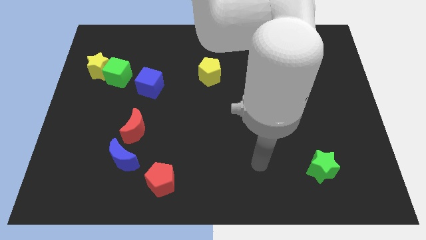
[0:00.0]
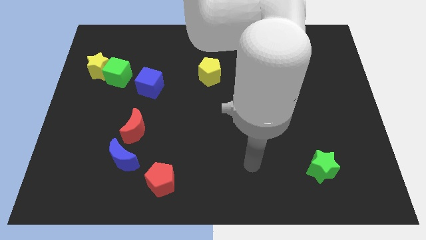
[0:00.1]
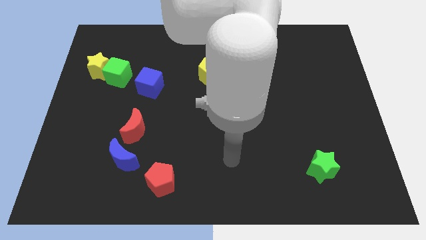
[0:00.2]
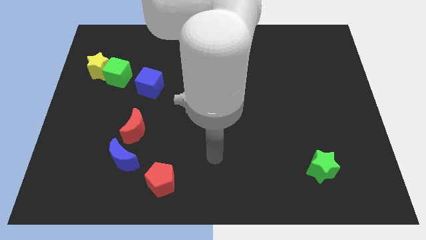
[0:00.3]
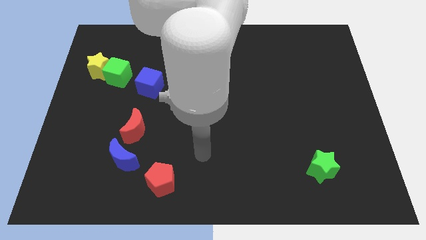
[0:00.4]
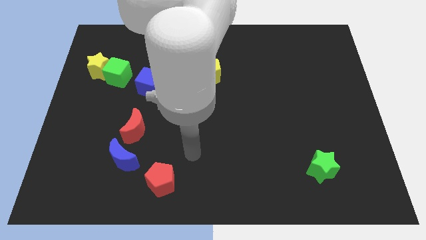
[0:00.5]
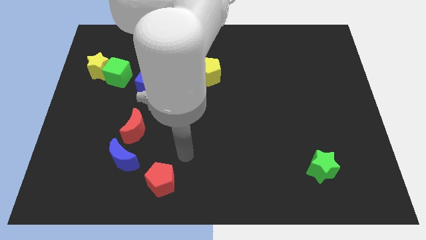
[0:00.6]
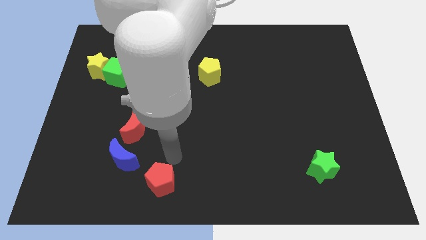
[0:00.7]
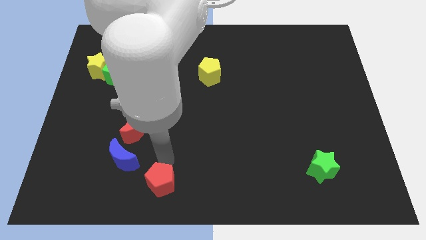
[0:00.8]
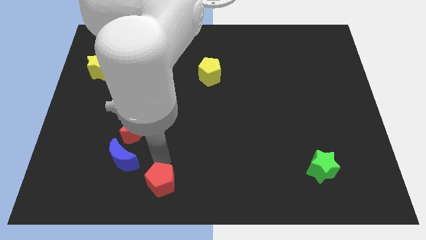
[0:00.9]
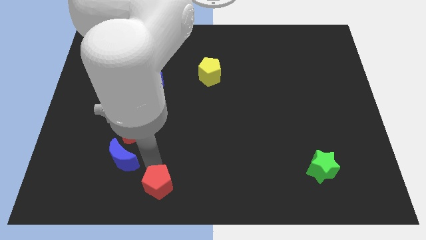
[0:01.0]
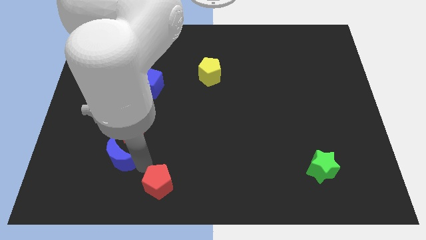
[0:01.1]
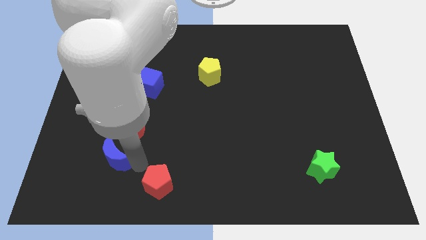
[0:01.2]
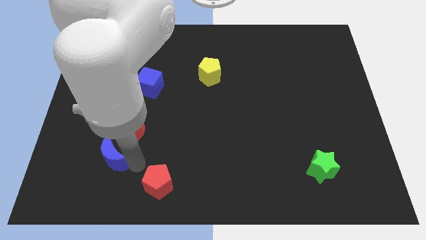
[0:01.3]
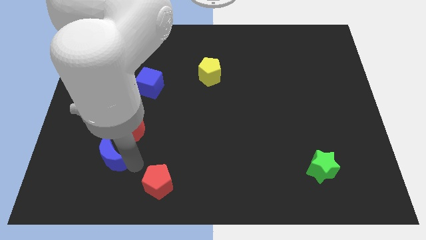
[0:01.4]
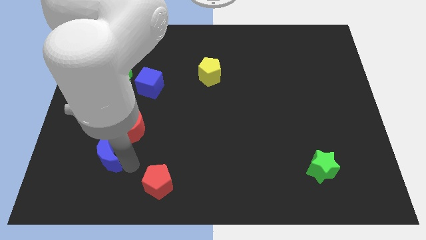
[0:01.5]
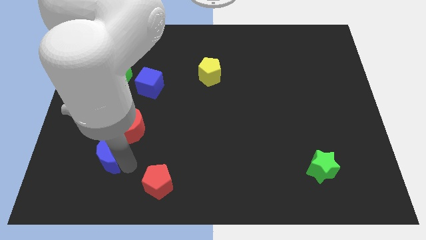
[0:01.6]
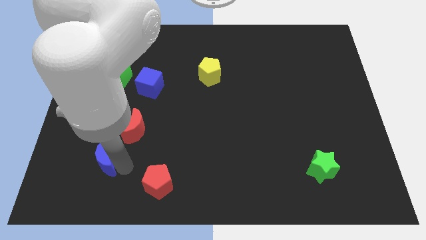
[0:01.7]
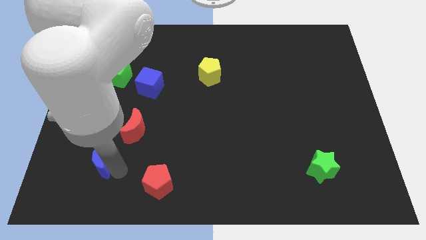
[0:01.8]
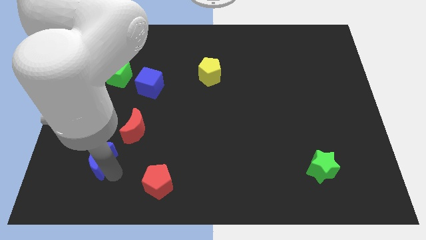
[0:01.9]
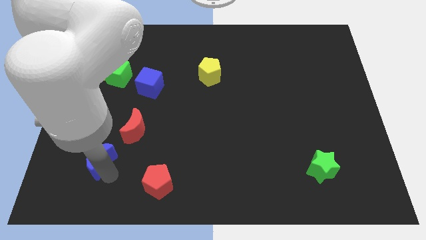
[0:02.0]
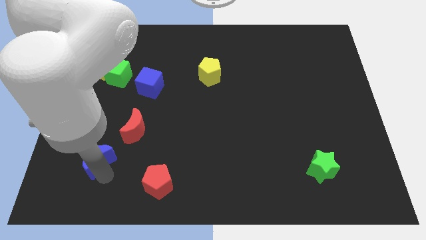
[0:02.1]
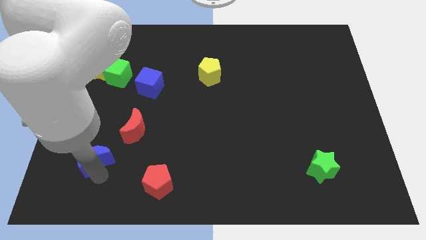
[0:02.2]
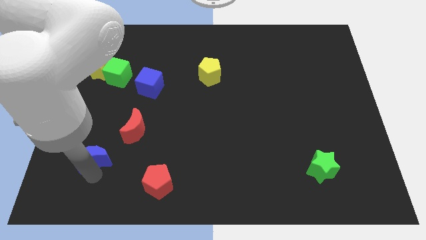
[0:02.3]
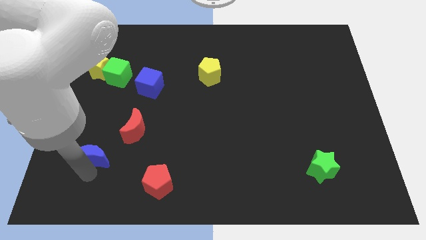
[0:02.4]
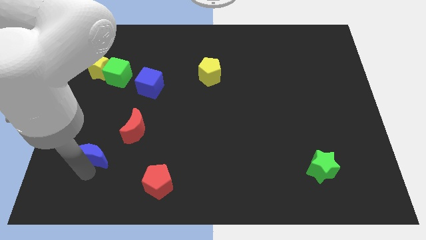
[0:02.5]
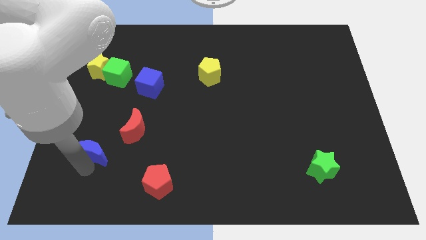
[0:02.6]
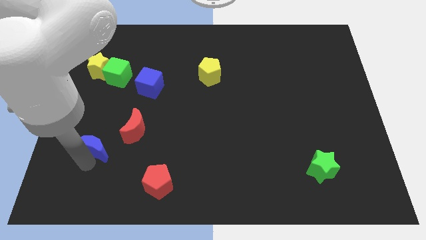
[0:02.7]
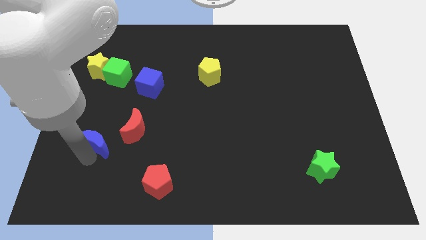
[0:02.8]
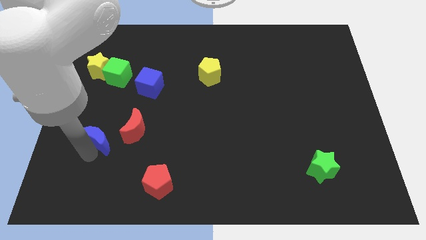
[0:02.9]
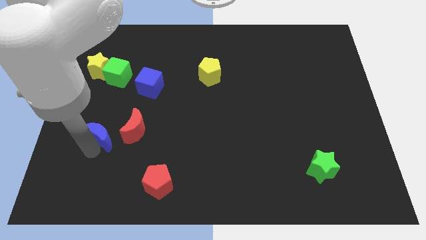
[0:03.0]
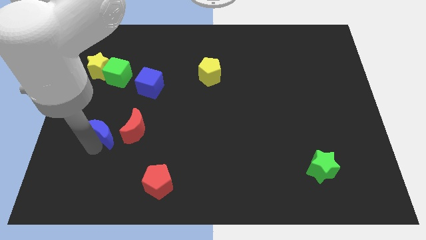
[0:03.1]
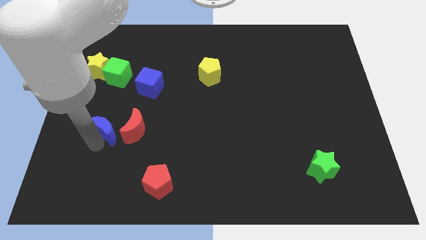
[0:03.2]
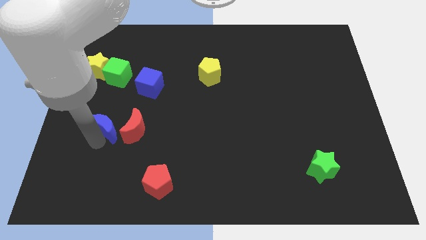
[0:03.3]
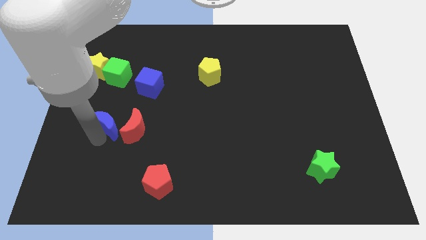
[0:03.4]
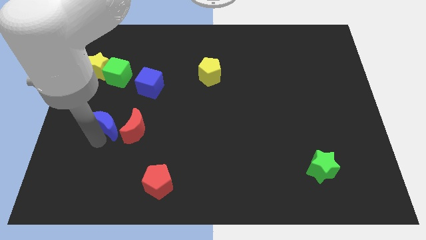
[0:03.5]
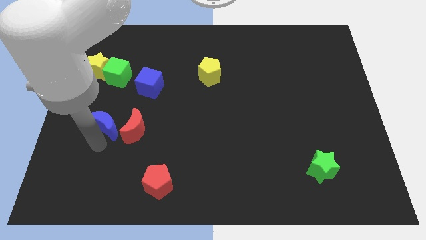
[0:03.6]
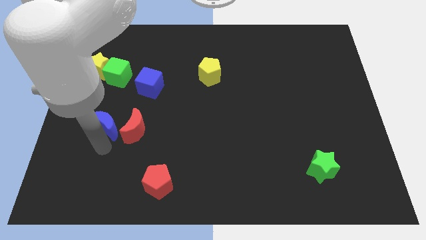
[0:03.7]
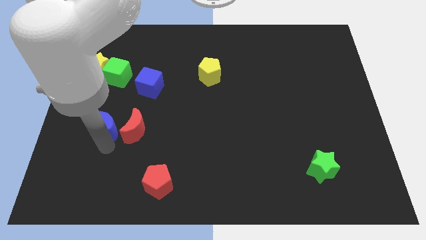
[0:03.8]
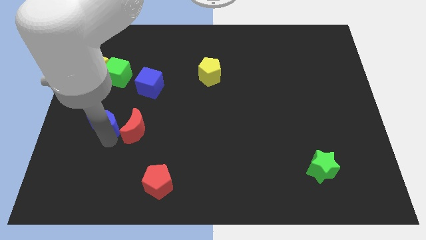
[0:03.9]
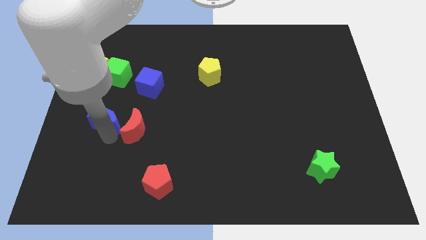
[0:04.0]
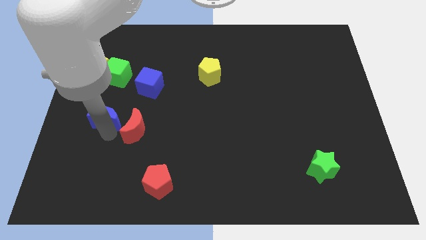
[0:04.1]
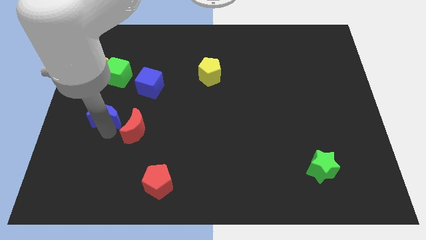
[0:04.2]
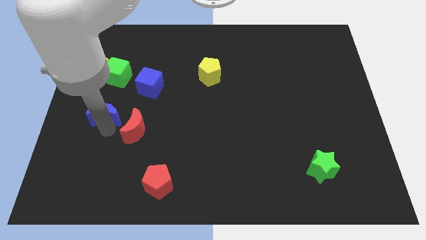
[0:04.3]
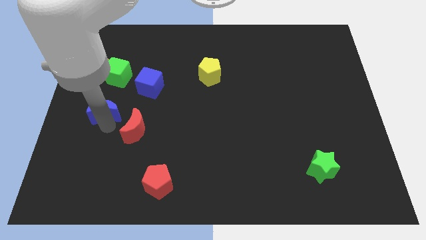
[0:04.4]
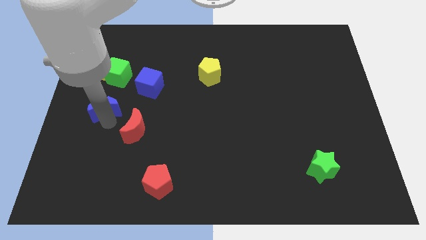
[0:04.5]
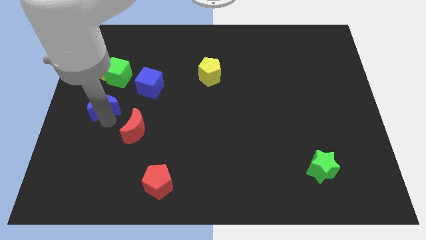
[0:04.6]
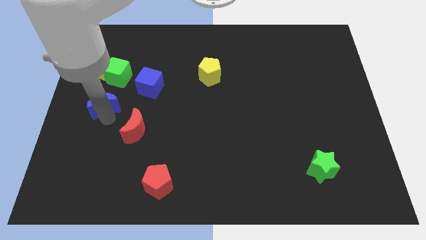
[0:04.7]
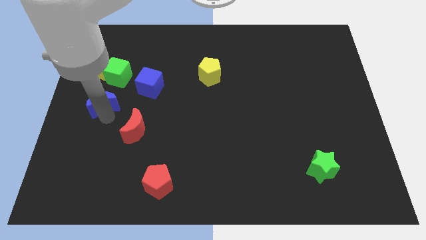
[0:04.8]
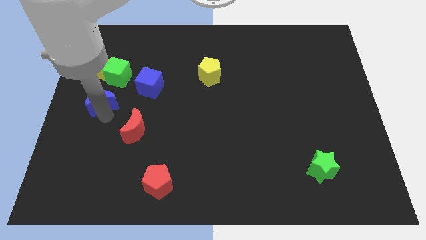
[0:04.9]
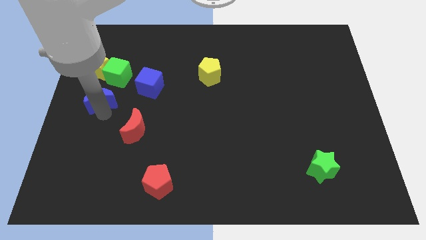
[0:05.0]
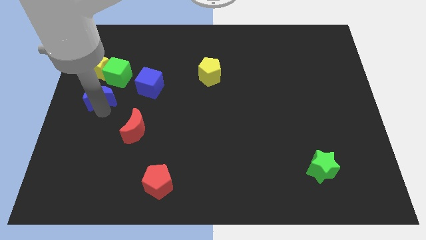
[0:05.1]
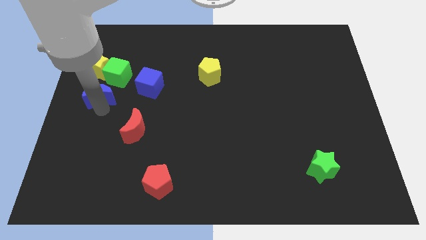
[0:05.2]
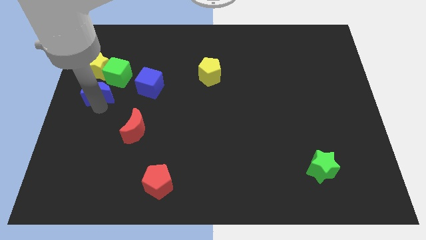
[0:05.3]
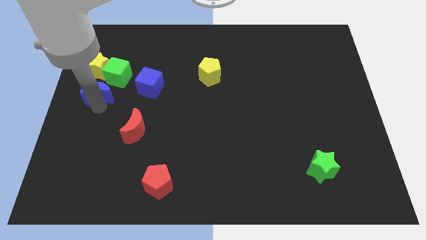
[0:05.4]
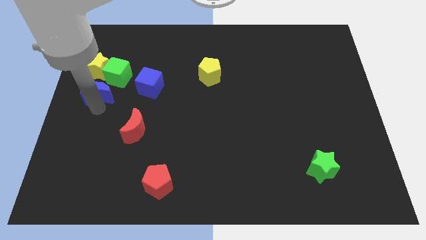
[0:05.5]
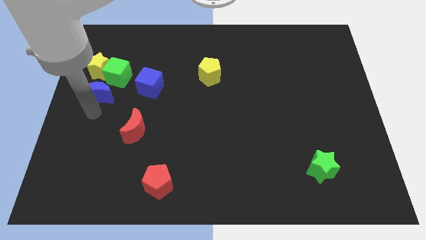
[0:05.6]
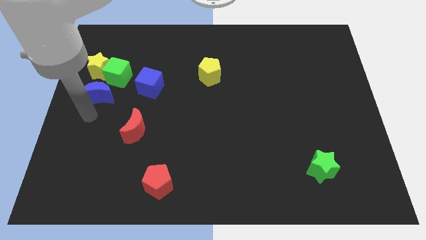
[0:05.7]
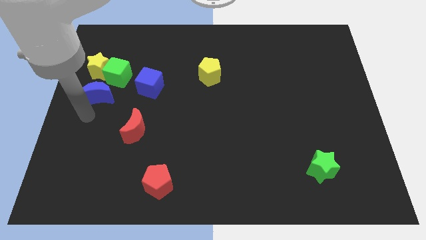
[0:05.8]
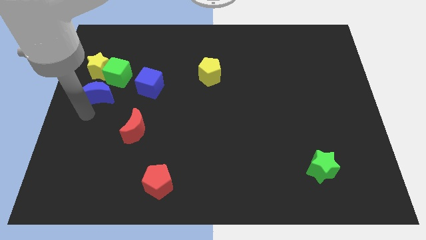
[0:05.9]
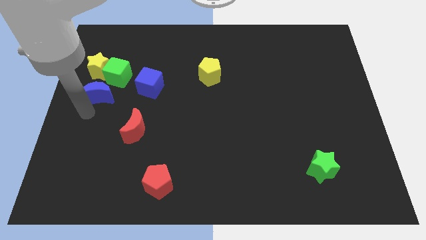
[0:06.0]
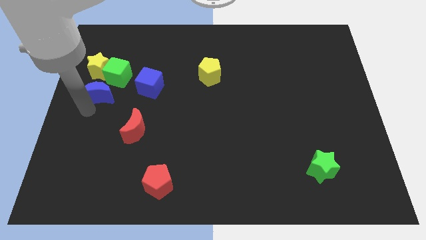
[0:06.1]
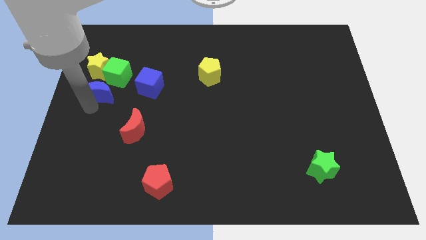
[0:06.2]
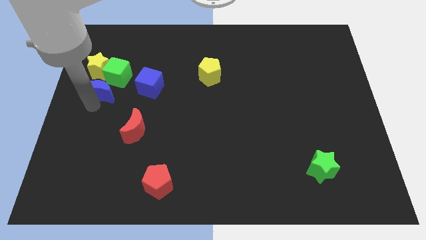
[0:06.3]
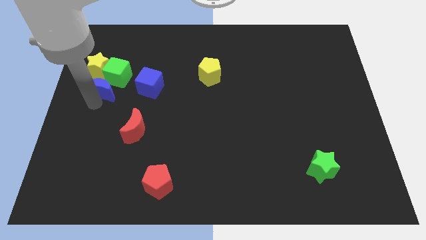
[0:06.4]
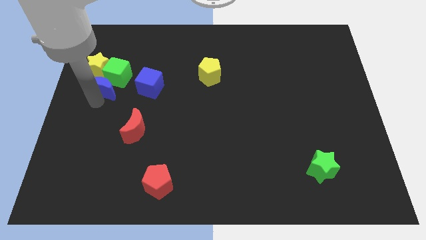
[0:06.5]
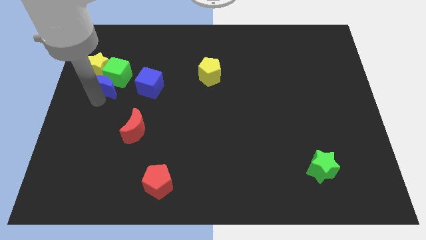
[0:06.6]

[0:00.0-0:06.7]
move the blue moon towards the green cube

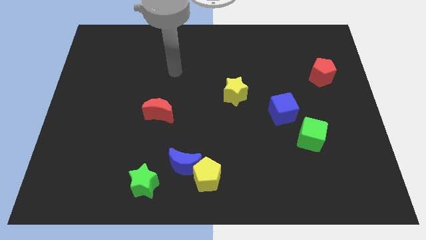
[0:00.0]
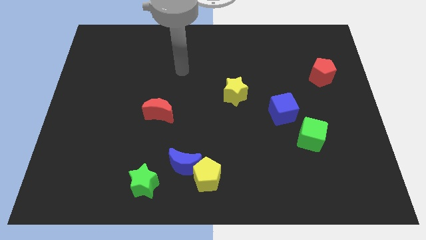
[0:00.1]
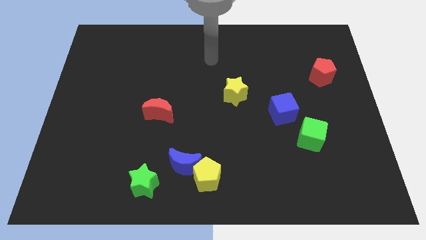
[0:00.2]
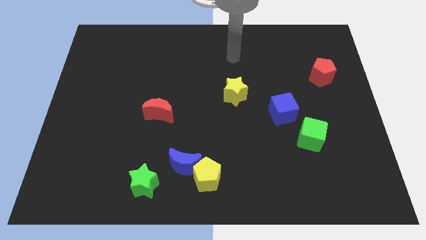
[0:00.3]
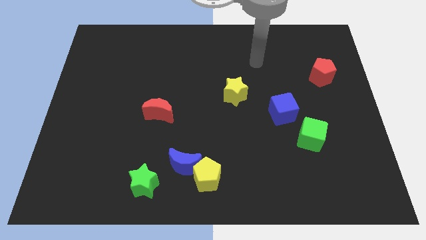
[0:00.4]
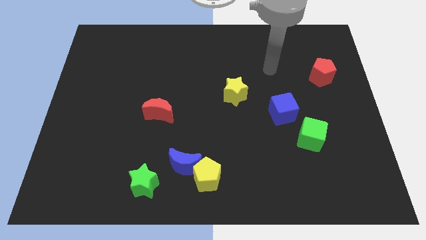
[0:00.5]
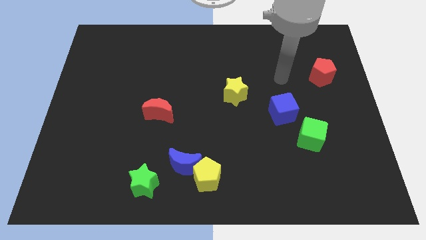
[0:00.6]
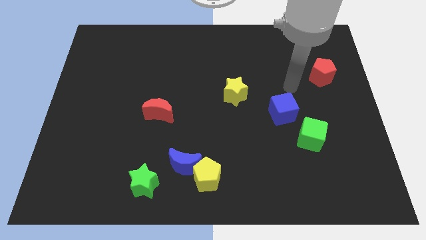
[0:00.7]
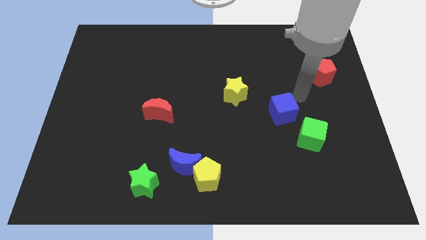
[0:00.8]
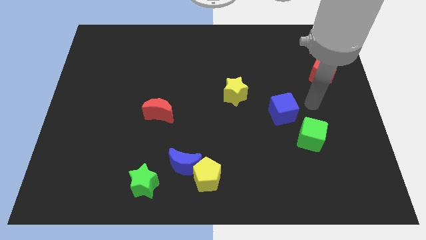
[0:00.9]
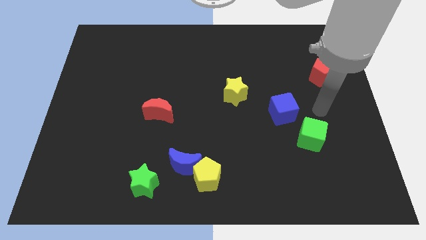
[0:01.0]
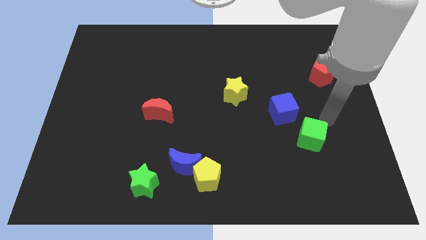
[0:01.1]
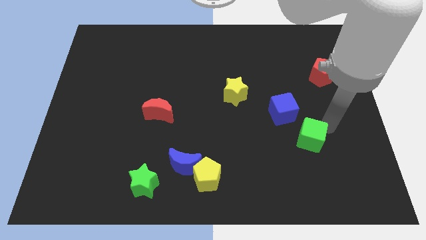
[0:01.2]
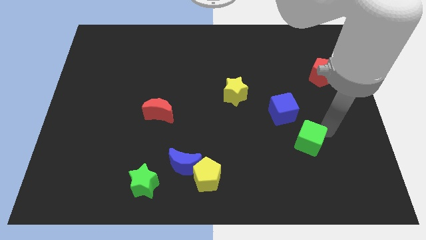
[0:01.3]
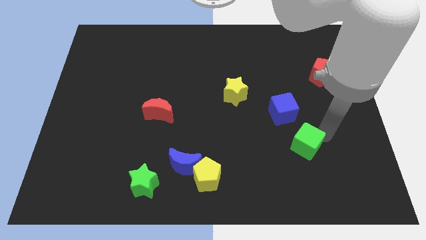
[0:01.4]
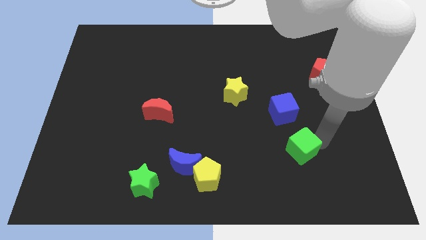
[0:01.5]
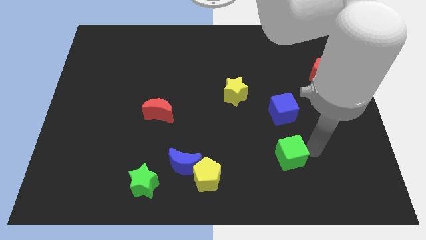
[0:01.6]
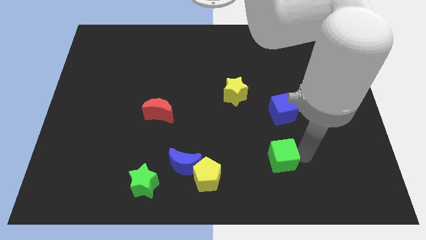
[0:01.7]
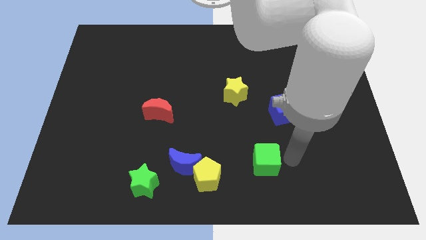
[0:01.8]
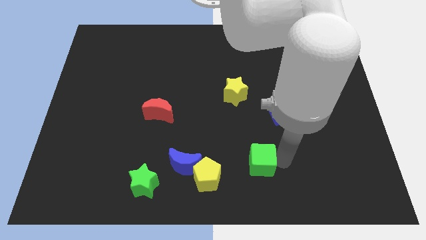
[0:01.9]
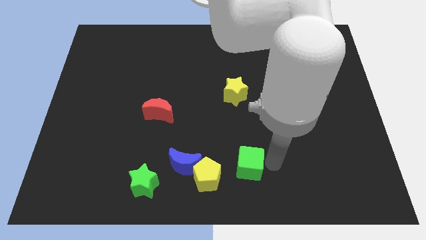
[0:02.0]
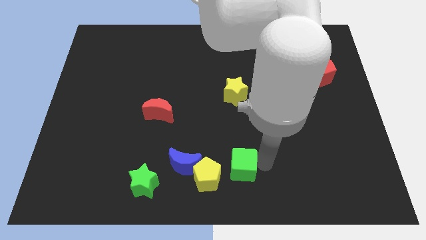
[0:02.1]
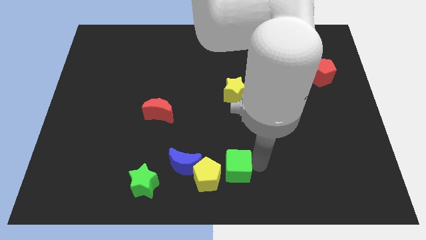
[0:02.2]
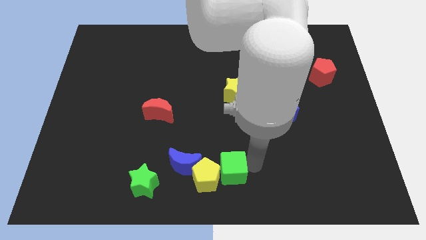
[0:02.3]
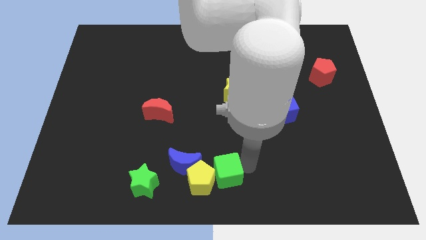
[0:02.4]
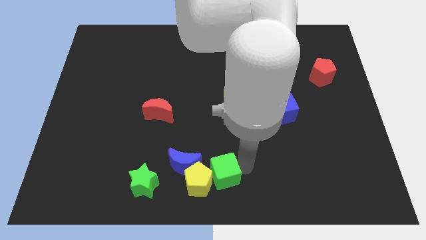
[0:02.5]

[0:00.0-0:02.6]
move the green cube close to the yellow pentagon
